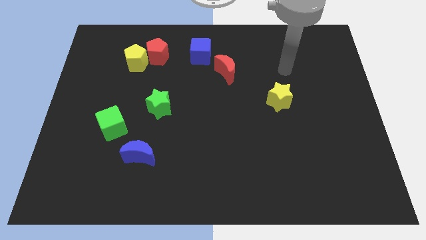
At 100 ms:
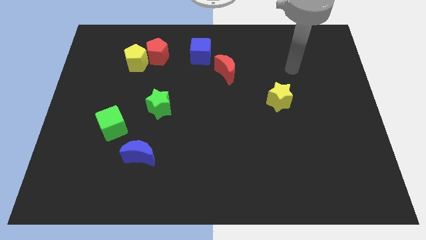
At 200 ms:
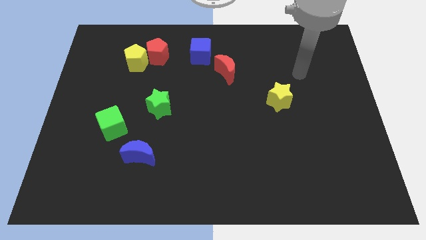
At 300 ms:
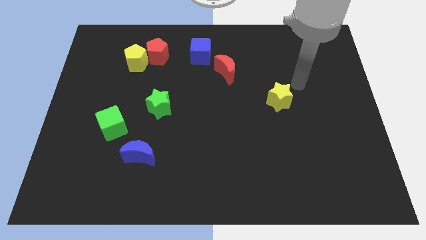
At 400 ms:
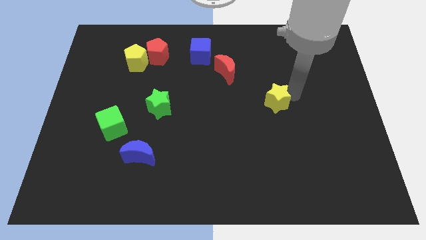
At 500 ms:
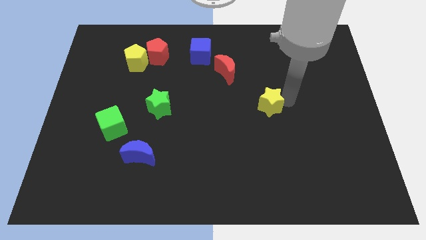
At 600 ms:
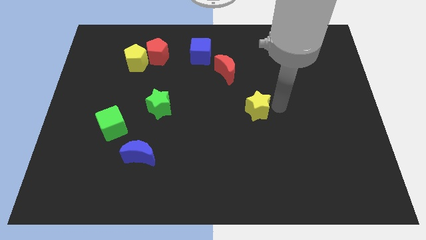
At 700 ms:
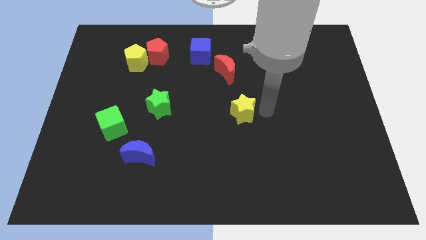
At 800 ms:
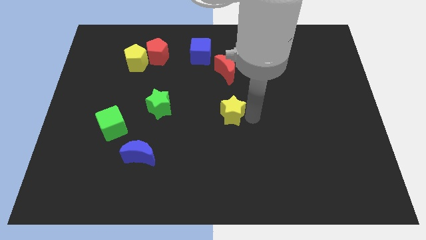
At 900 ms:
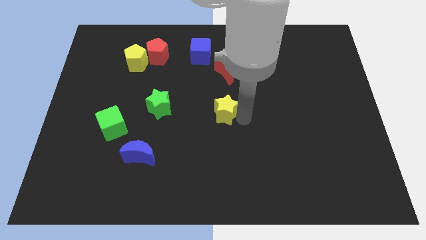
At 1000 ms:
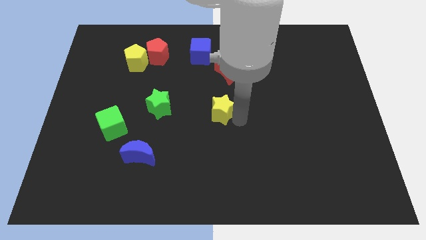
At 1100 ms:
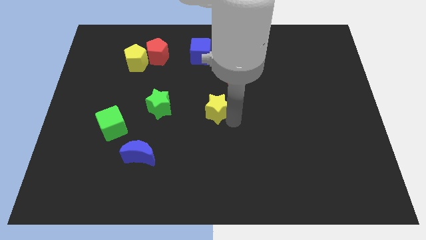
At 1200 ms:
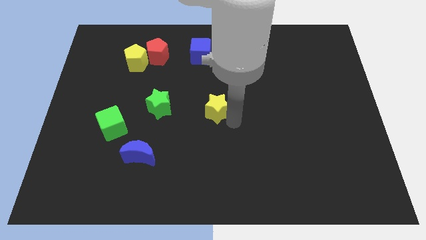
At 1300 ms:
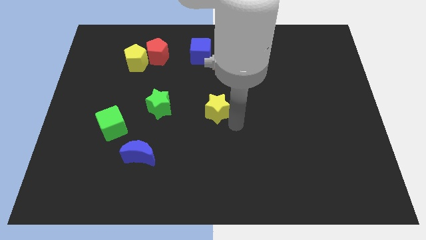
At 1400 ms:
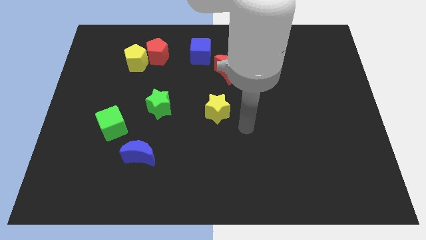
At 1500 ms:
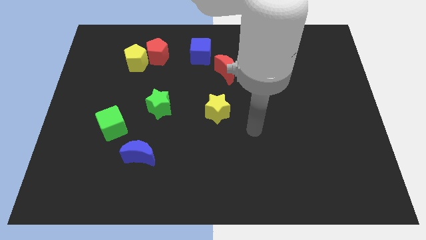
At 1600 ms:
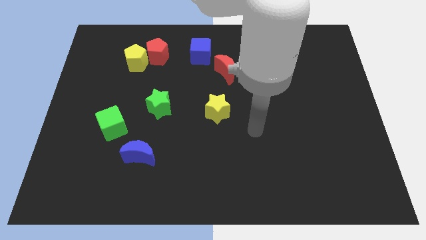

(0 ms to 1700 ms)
place the yellow star below red moon

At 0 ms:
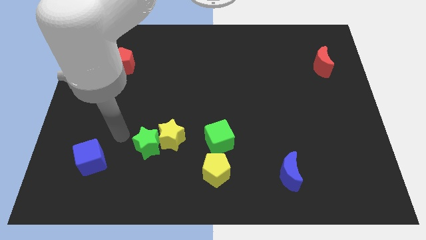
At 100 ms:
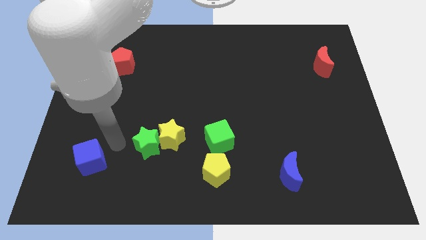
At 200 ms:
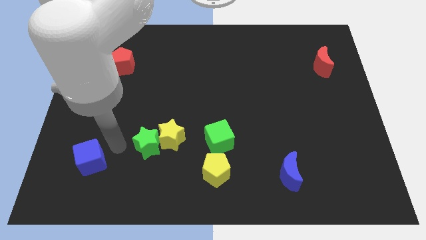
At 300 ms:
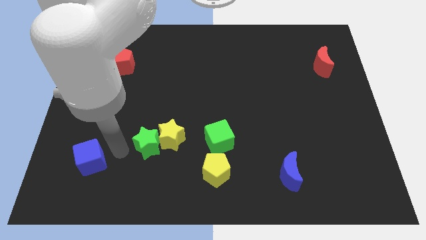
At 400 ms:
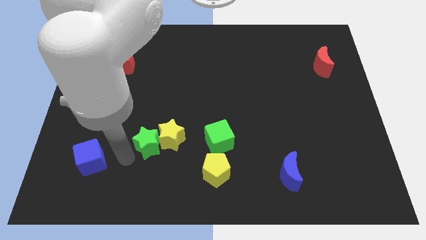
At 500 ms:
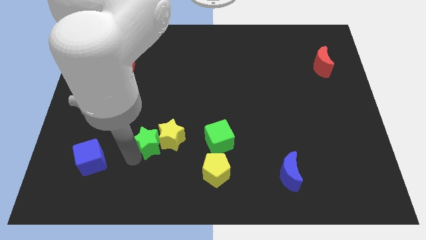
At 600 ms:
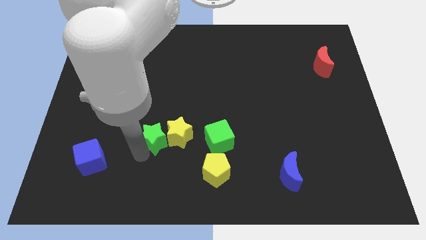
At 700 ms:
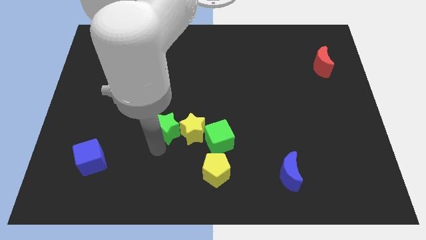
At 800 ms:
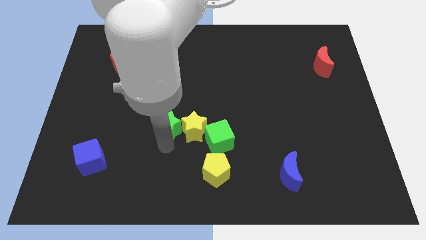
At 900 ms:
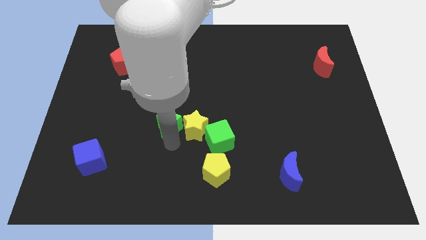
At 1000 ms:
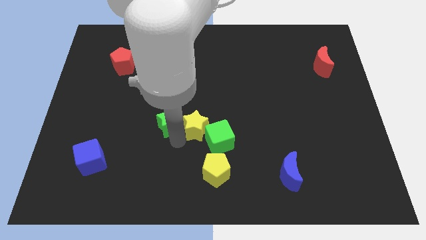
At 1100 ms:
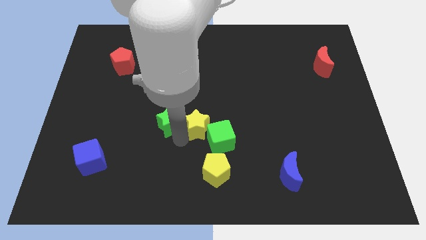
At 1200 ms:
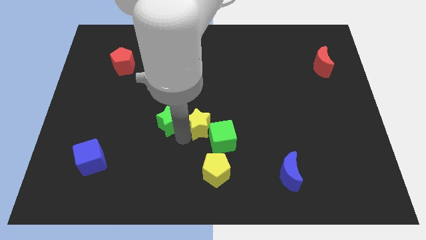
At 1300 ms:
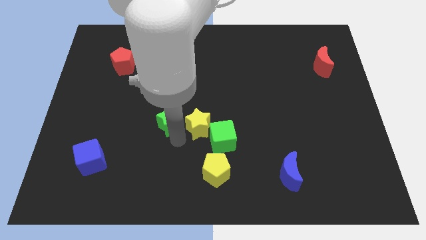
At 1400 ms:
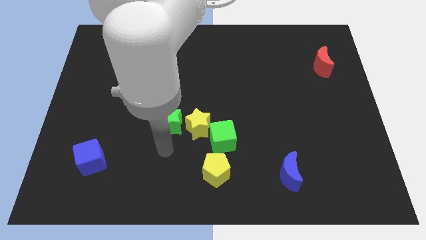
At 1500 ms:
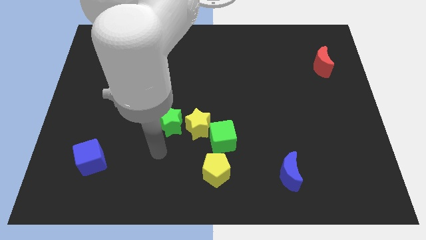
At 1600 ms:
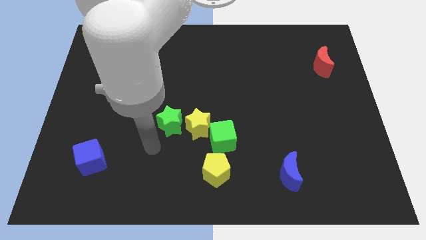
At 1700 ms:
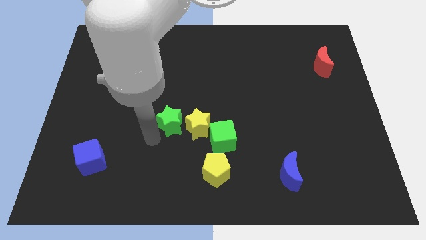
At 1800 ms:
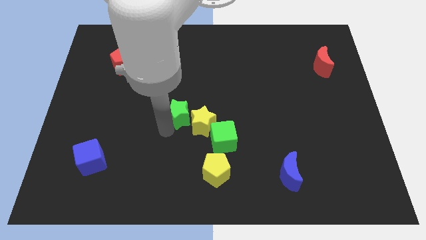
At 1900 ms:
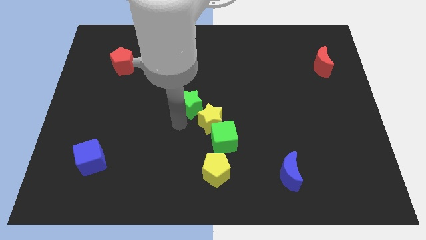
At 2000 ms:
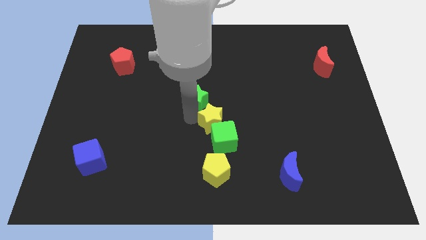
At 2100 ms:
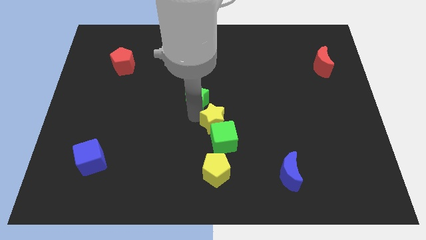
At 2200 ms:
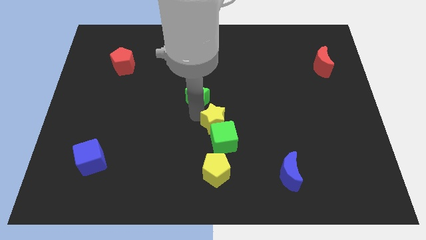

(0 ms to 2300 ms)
slightly move the green star up

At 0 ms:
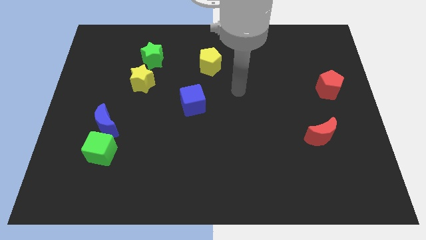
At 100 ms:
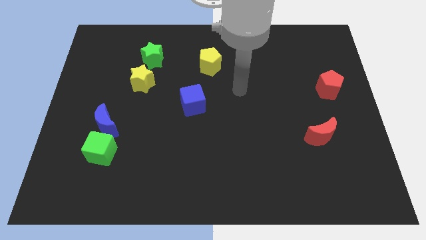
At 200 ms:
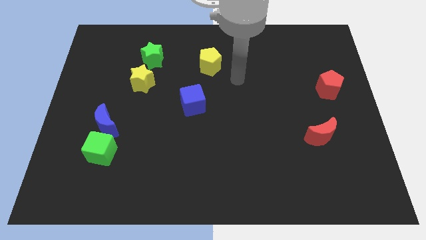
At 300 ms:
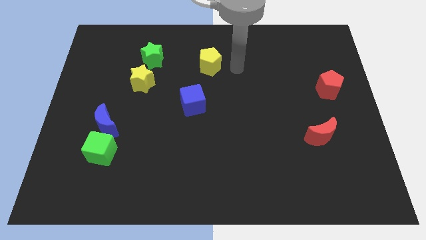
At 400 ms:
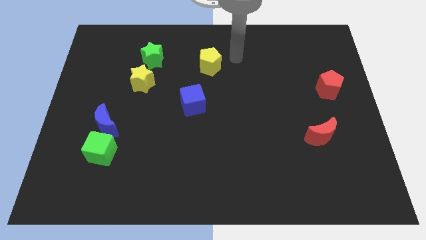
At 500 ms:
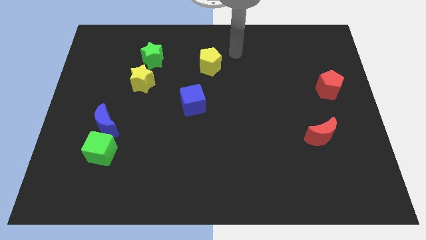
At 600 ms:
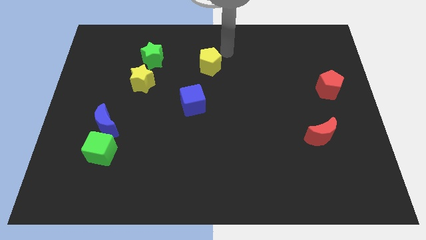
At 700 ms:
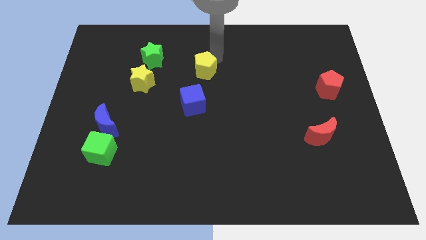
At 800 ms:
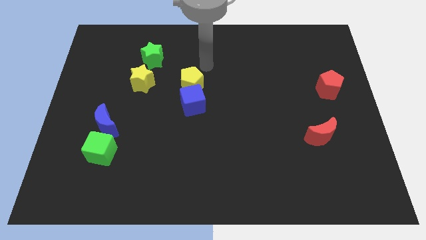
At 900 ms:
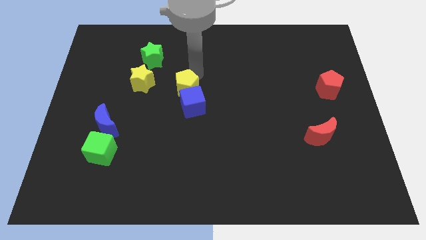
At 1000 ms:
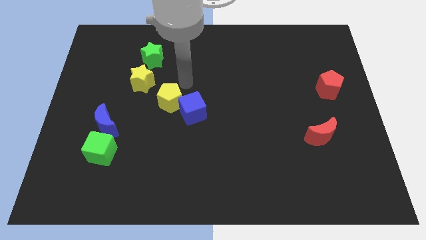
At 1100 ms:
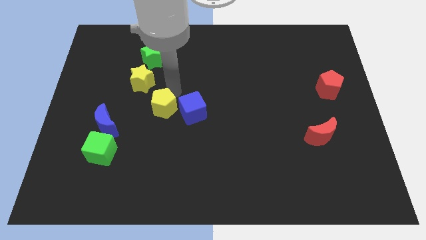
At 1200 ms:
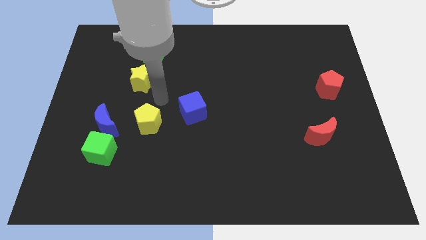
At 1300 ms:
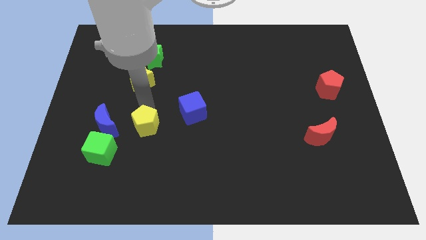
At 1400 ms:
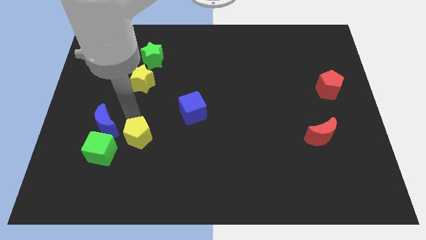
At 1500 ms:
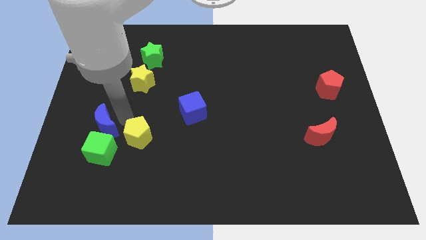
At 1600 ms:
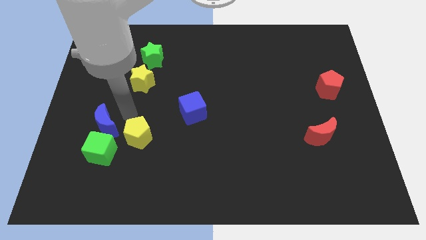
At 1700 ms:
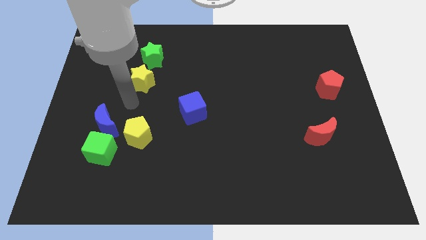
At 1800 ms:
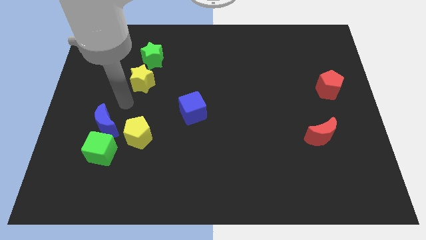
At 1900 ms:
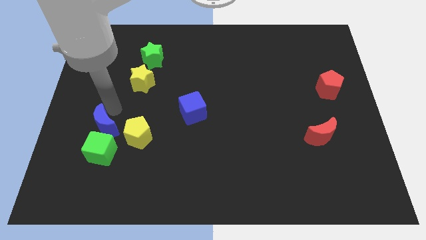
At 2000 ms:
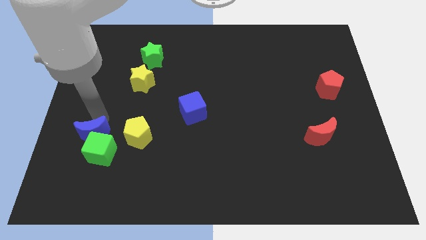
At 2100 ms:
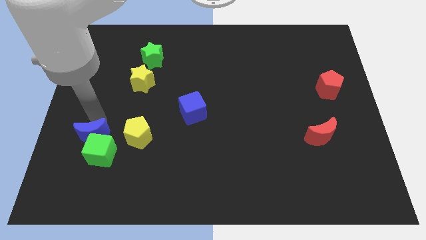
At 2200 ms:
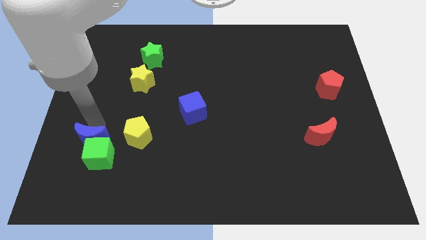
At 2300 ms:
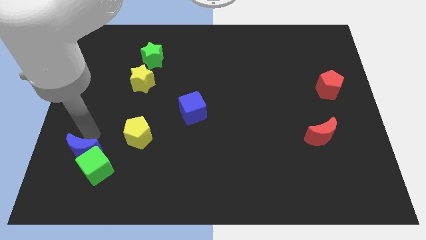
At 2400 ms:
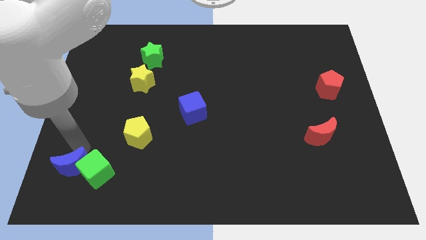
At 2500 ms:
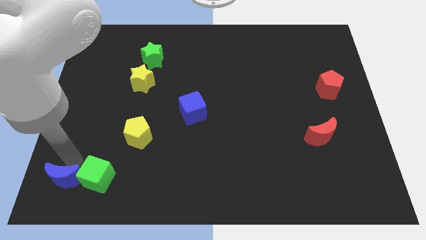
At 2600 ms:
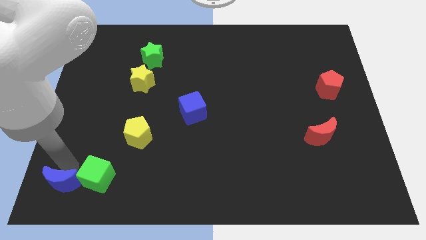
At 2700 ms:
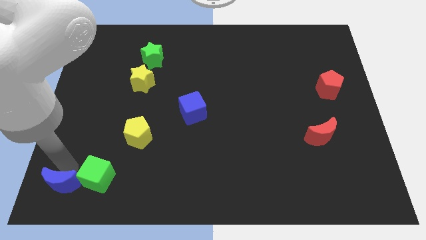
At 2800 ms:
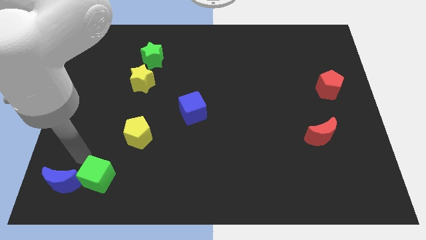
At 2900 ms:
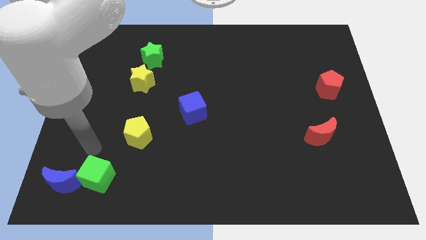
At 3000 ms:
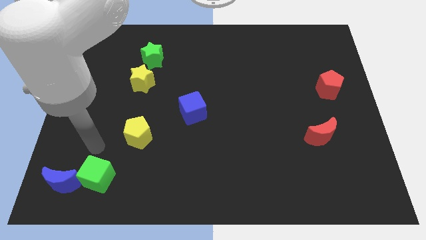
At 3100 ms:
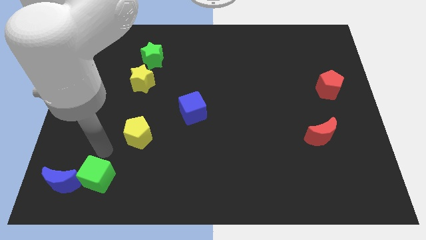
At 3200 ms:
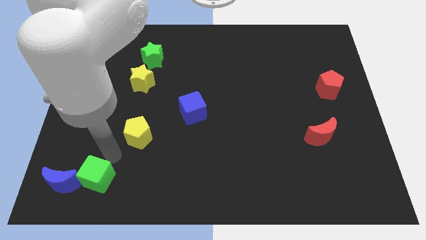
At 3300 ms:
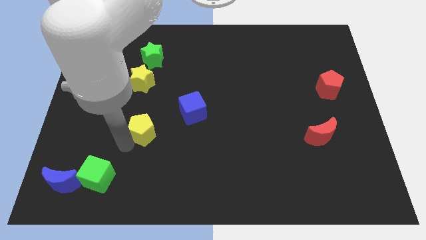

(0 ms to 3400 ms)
push the yellow pentagon and blue crescent to the bottom left side of the board

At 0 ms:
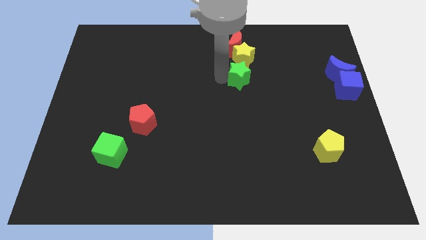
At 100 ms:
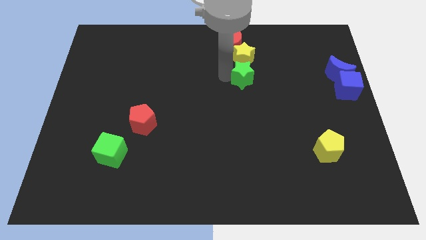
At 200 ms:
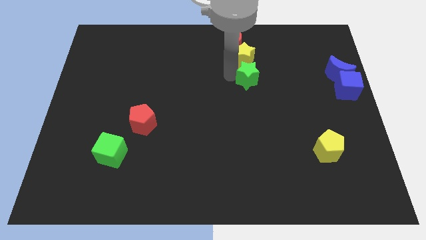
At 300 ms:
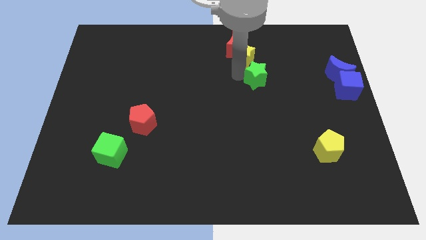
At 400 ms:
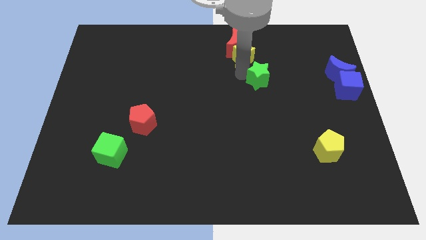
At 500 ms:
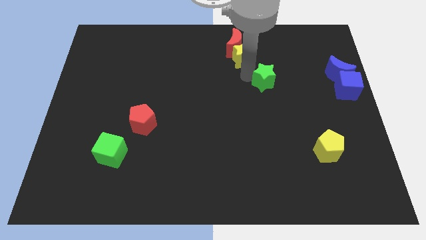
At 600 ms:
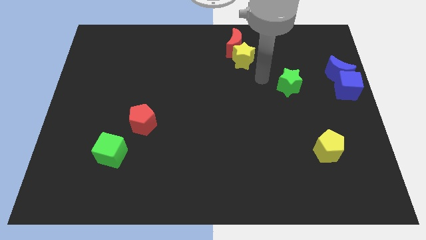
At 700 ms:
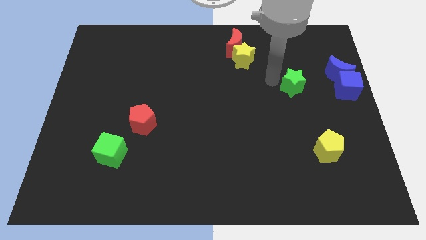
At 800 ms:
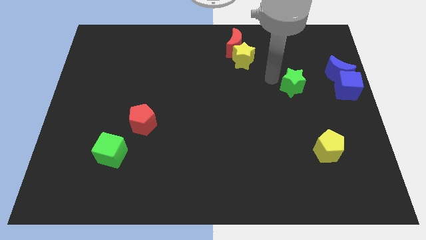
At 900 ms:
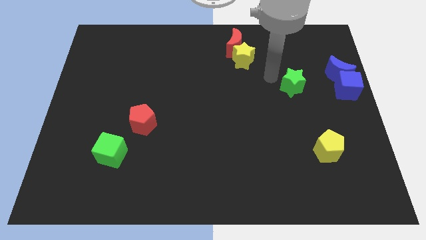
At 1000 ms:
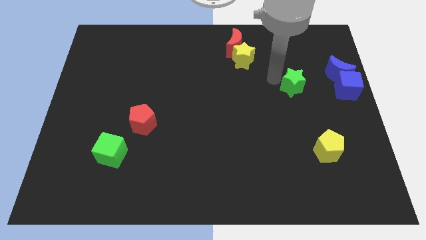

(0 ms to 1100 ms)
place the green star parallel to blue cube

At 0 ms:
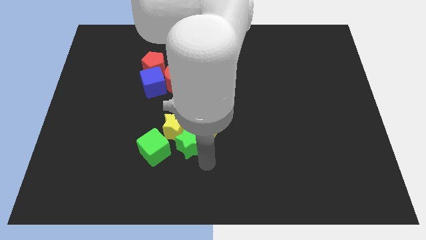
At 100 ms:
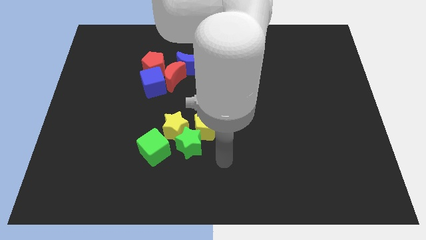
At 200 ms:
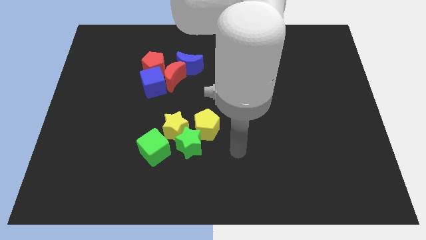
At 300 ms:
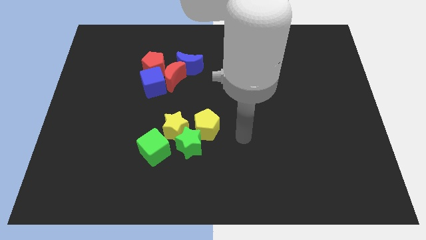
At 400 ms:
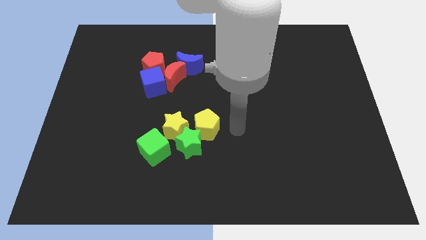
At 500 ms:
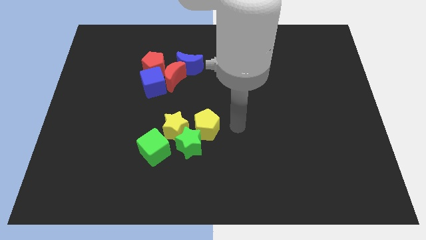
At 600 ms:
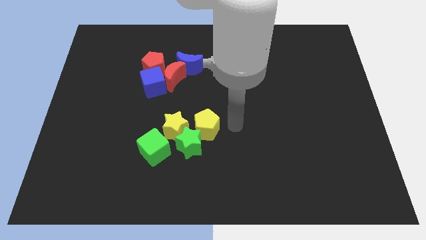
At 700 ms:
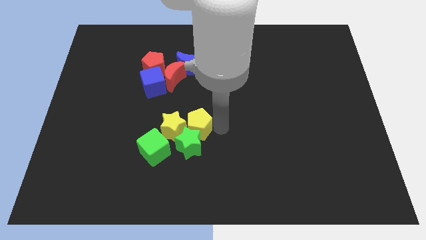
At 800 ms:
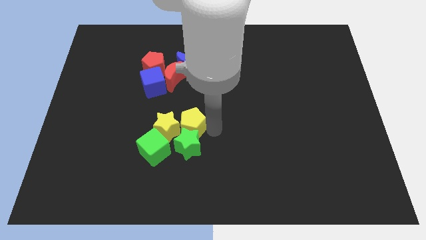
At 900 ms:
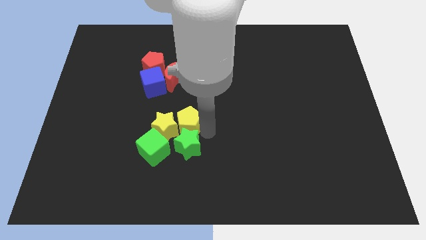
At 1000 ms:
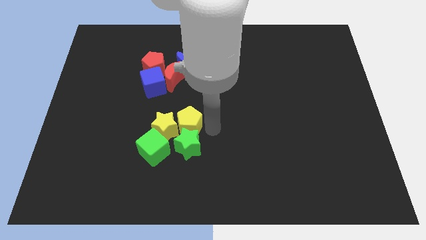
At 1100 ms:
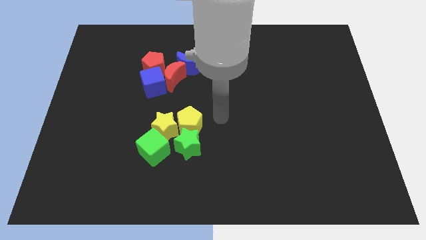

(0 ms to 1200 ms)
slightly push the yellow pentagon into the yellow star
